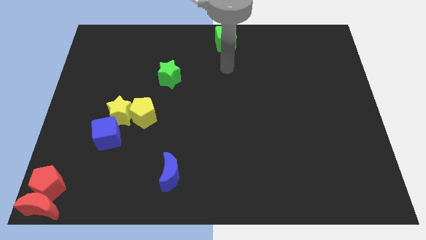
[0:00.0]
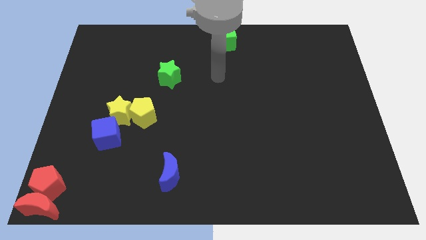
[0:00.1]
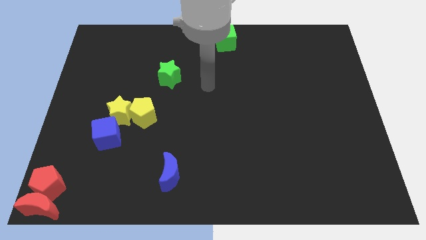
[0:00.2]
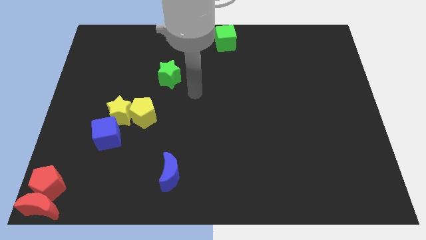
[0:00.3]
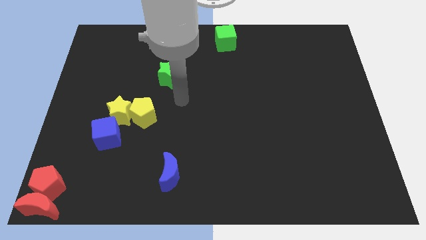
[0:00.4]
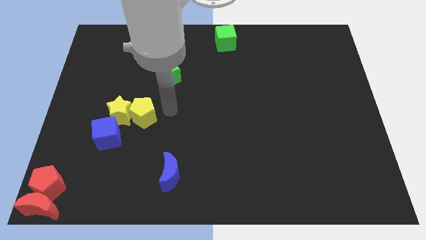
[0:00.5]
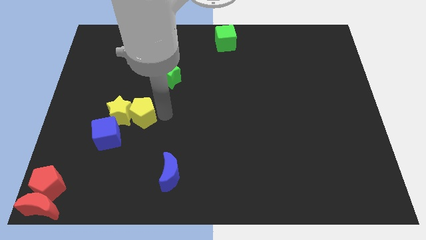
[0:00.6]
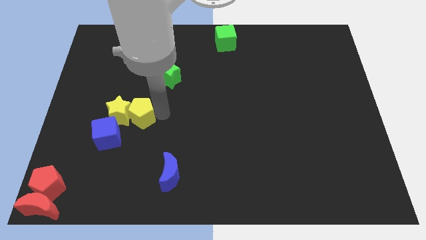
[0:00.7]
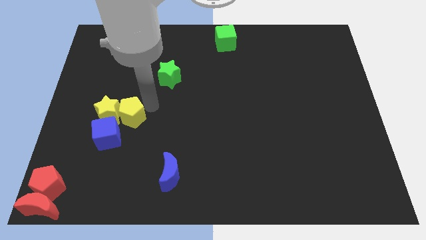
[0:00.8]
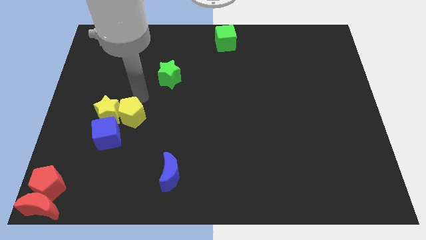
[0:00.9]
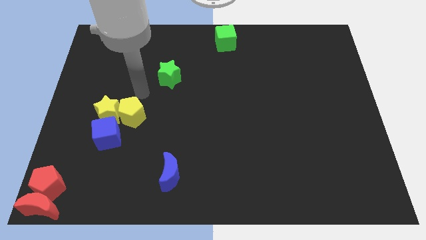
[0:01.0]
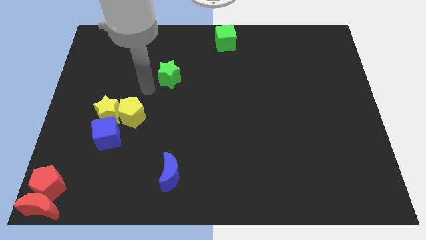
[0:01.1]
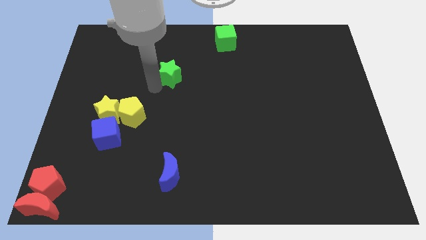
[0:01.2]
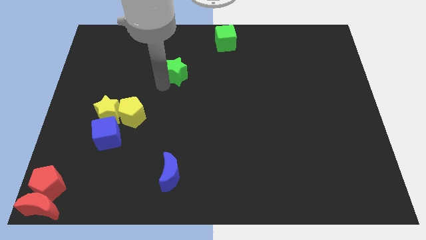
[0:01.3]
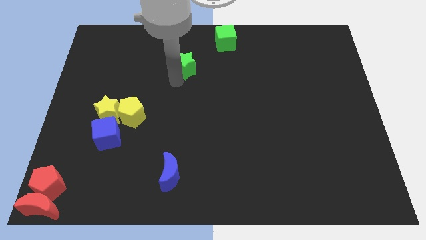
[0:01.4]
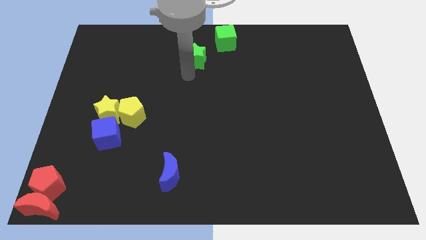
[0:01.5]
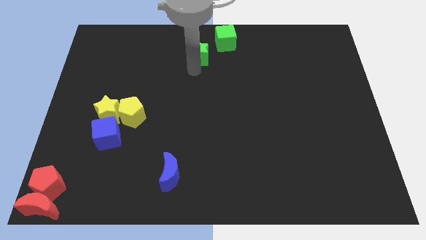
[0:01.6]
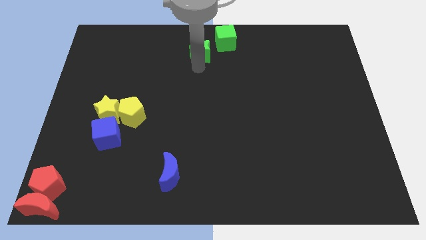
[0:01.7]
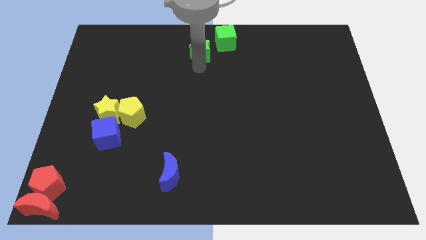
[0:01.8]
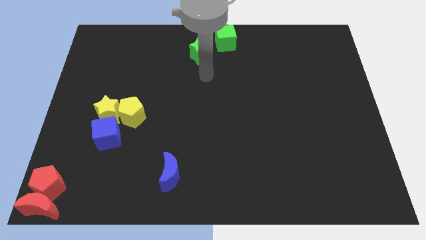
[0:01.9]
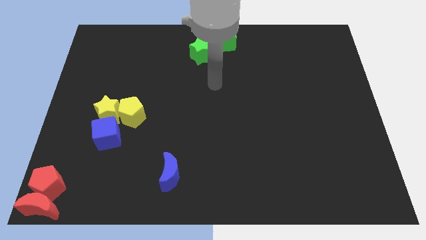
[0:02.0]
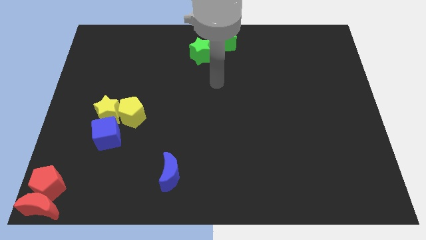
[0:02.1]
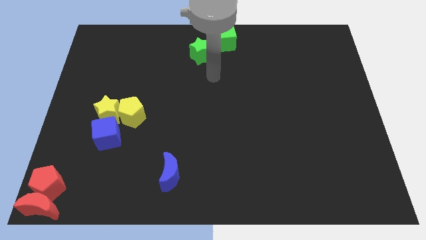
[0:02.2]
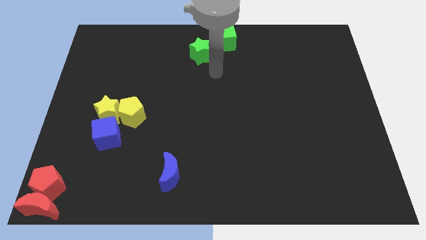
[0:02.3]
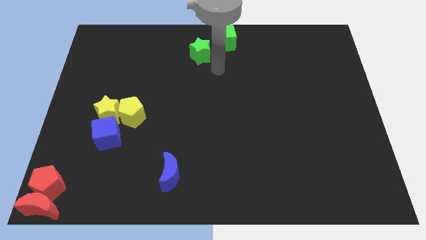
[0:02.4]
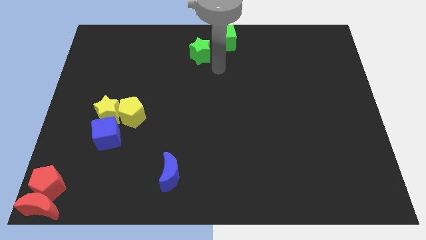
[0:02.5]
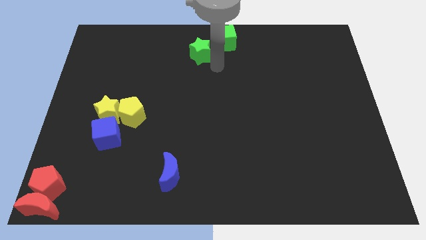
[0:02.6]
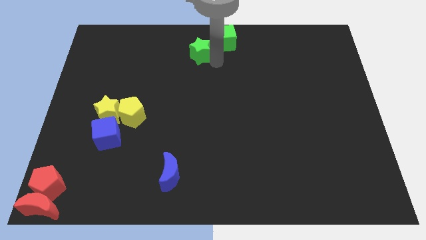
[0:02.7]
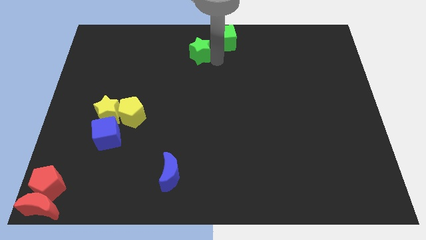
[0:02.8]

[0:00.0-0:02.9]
place the green star diagonally bottom left to green cube

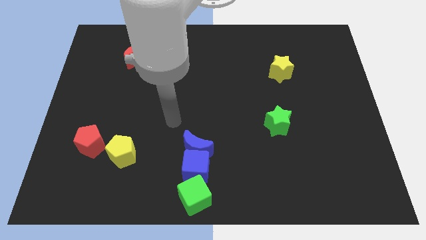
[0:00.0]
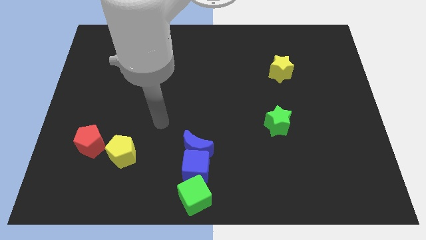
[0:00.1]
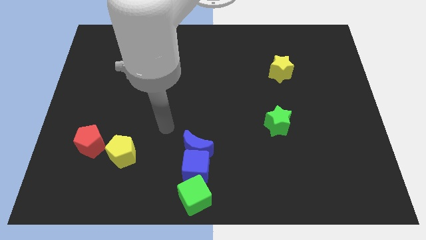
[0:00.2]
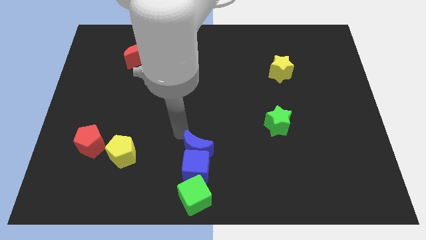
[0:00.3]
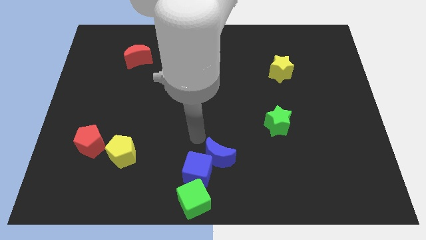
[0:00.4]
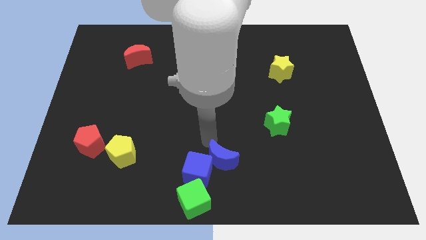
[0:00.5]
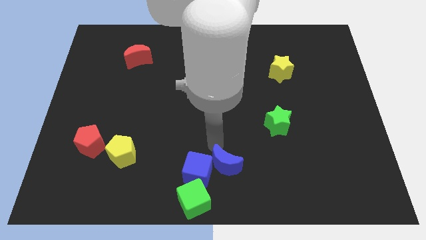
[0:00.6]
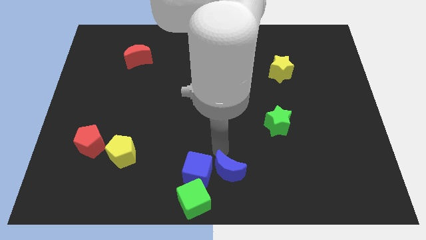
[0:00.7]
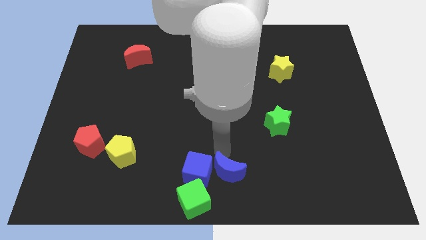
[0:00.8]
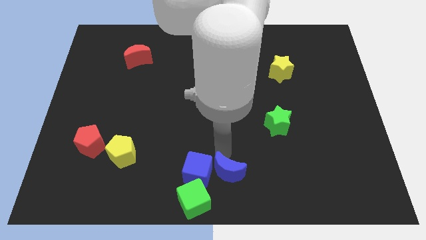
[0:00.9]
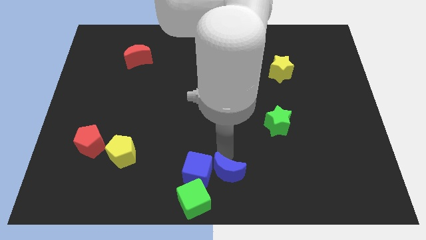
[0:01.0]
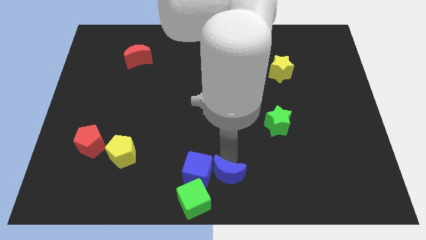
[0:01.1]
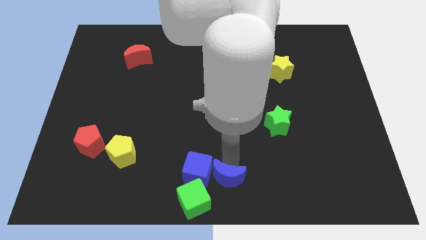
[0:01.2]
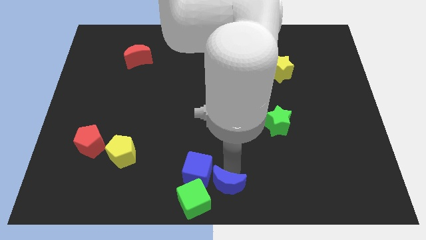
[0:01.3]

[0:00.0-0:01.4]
push the blue crescent to the right of the blue cube

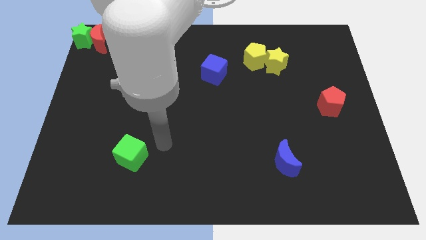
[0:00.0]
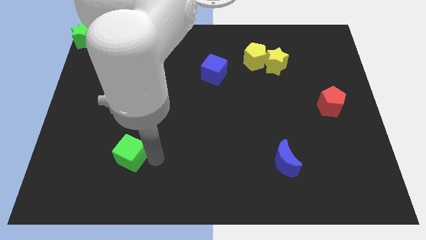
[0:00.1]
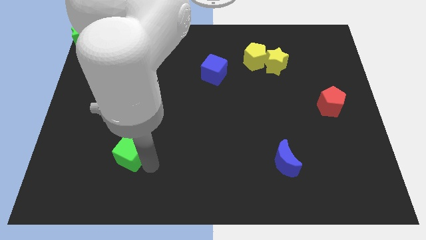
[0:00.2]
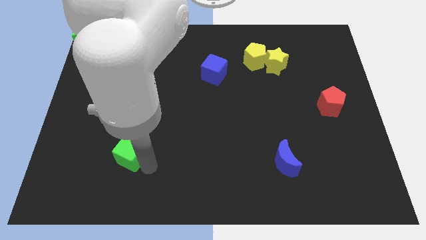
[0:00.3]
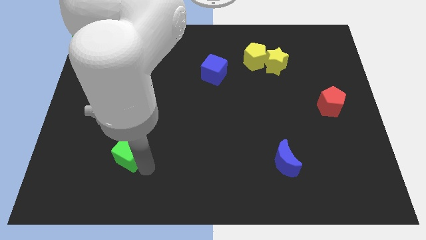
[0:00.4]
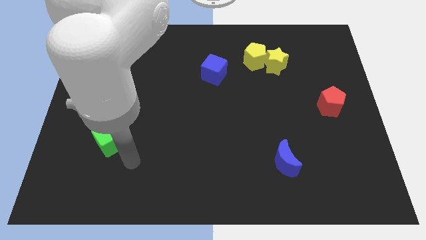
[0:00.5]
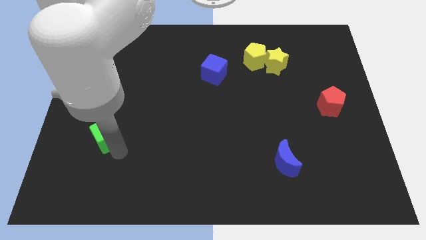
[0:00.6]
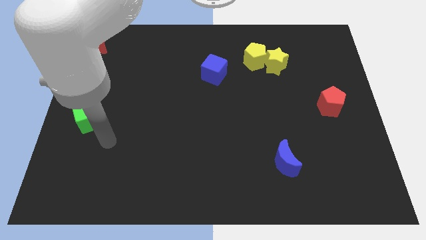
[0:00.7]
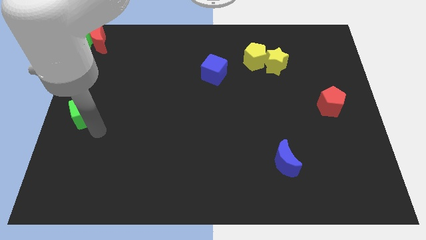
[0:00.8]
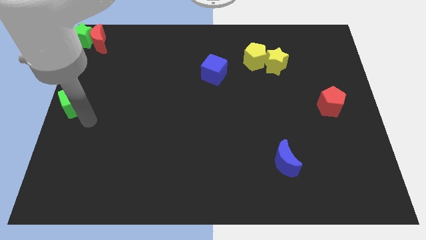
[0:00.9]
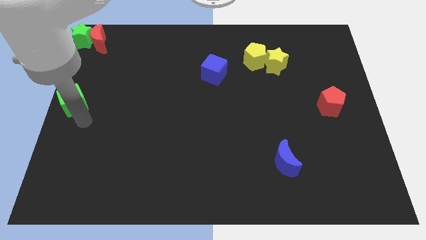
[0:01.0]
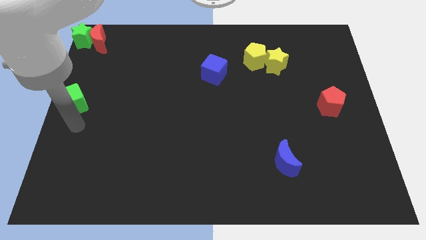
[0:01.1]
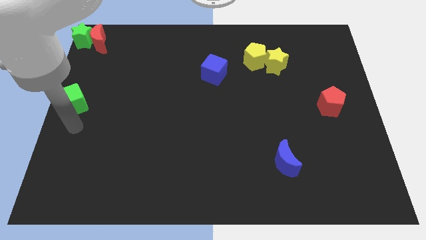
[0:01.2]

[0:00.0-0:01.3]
push the green cube to the left center

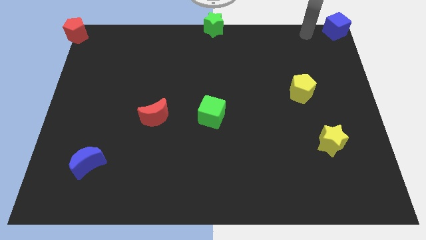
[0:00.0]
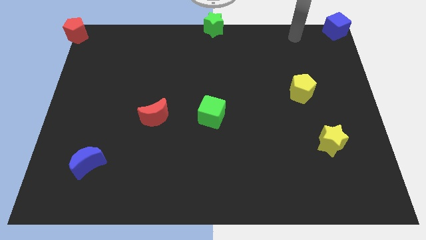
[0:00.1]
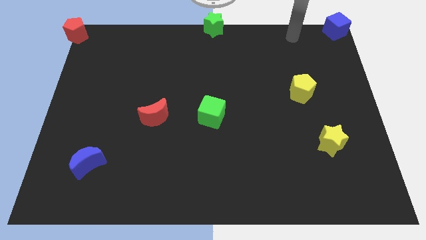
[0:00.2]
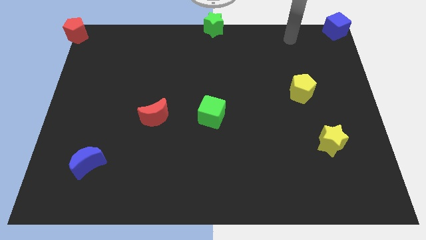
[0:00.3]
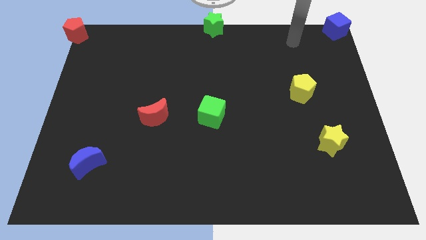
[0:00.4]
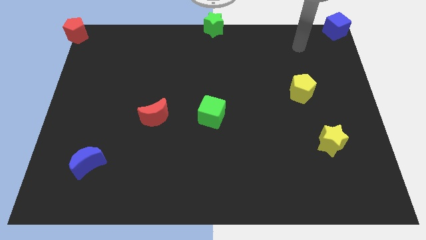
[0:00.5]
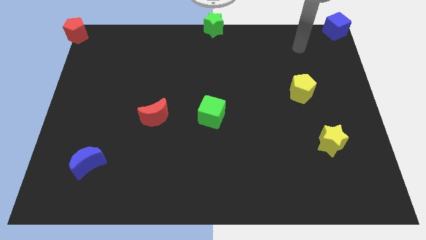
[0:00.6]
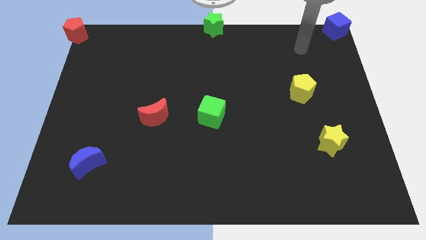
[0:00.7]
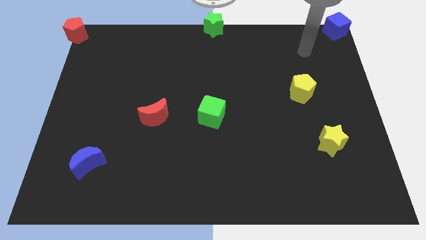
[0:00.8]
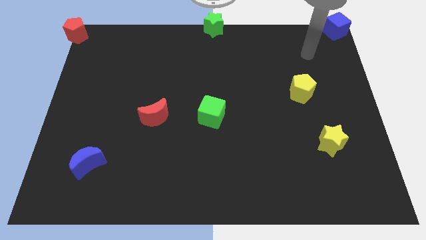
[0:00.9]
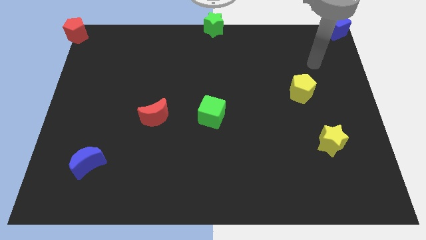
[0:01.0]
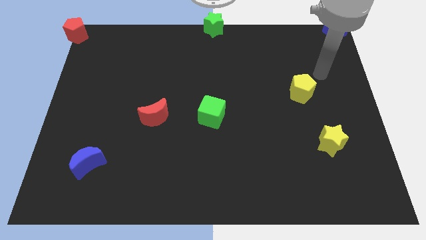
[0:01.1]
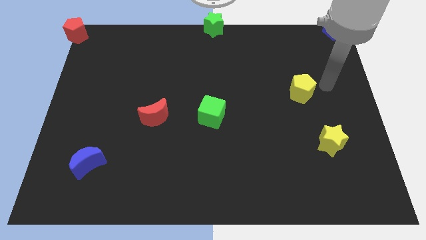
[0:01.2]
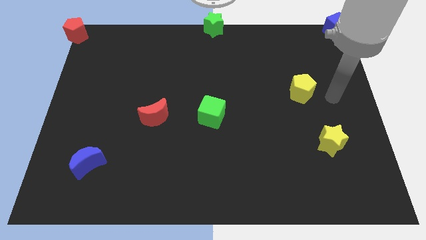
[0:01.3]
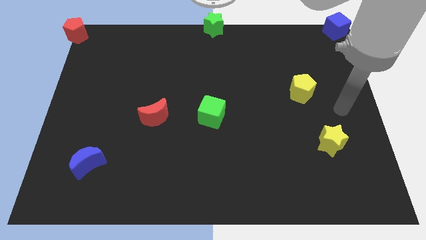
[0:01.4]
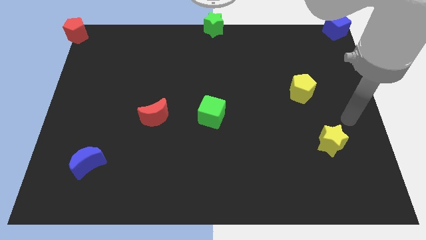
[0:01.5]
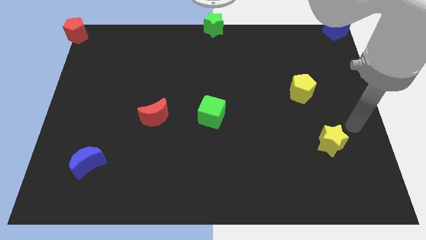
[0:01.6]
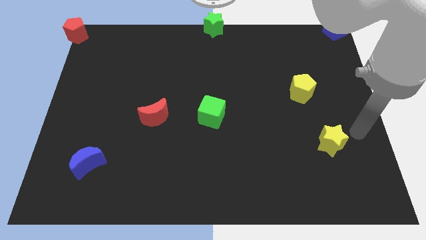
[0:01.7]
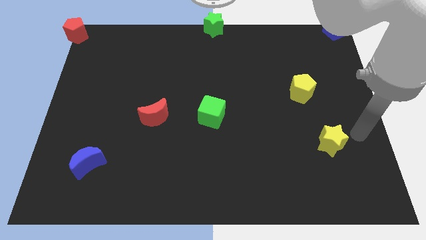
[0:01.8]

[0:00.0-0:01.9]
move yourself away from the blue cube

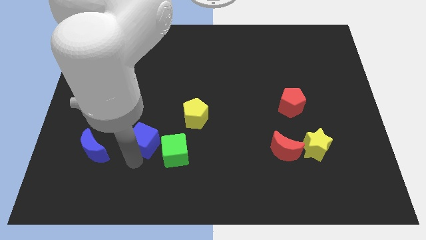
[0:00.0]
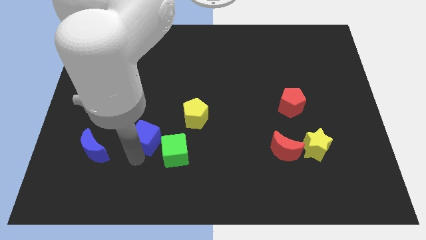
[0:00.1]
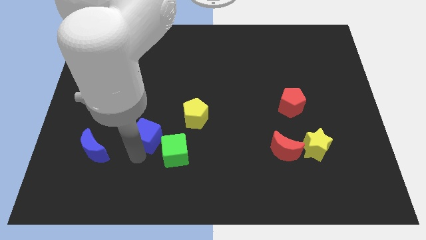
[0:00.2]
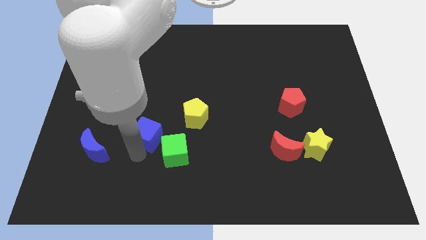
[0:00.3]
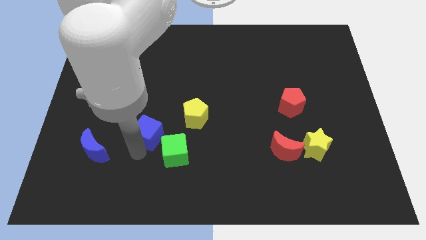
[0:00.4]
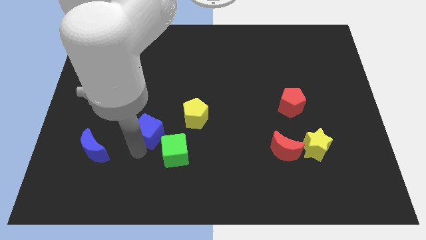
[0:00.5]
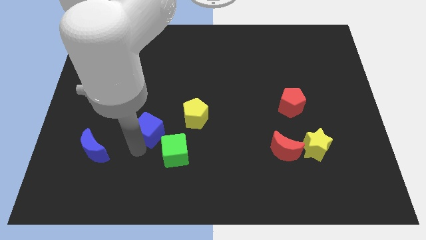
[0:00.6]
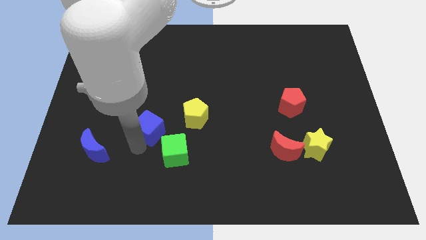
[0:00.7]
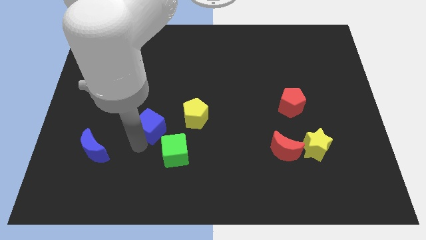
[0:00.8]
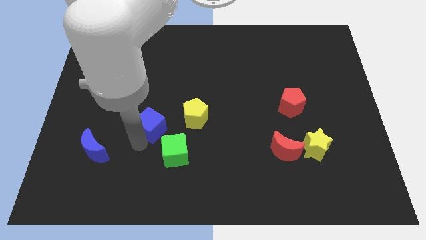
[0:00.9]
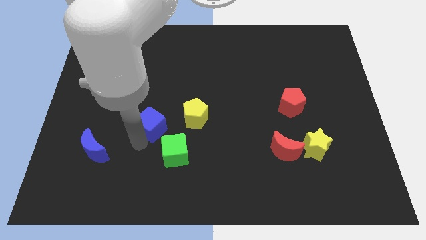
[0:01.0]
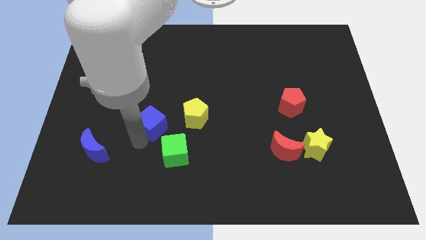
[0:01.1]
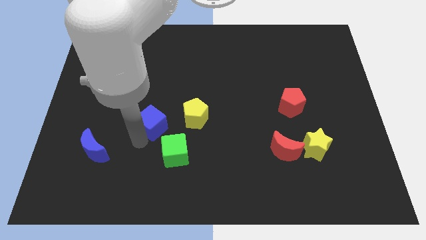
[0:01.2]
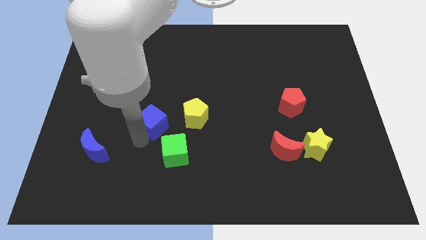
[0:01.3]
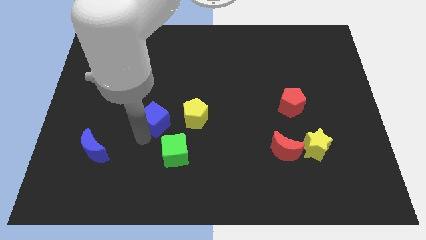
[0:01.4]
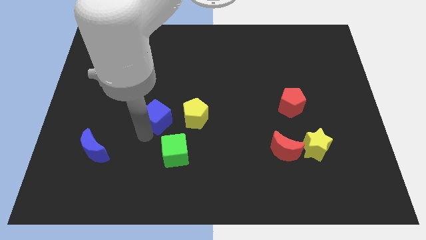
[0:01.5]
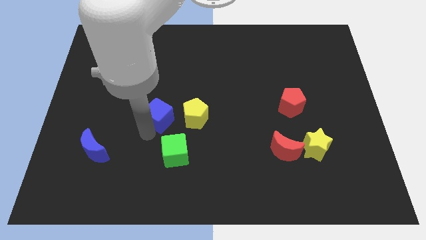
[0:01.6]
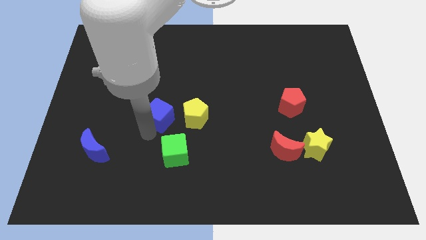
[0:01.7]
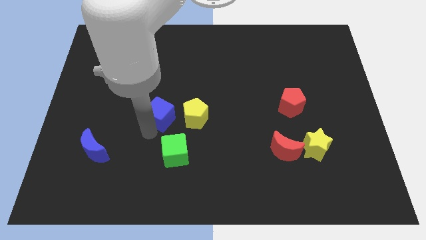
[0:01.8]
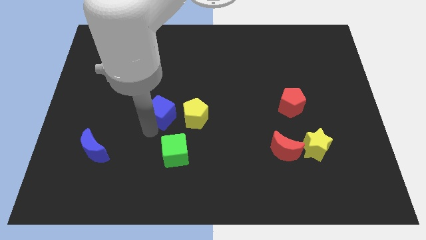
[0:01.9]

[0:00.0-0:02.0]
put the blue cube left to the yellow pentagon
